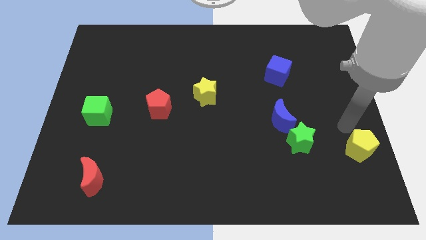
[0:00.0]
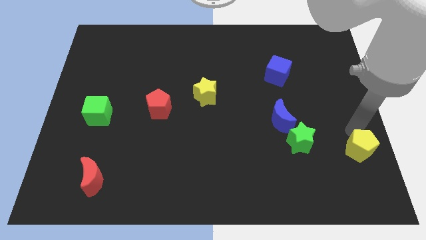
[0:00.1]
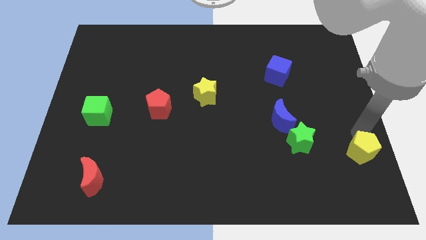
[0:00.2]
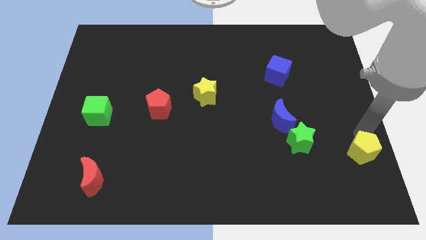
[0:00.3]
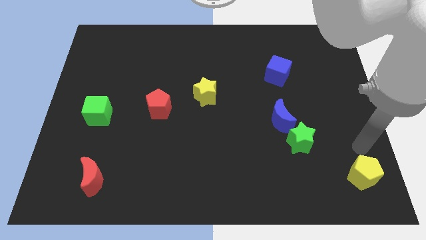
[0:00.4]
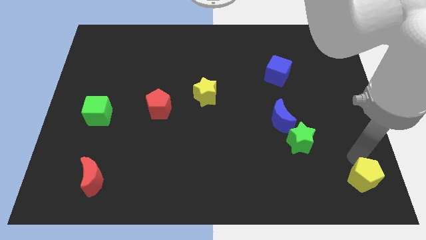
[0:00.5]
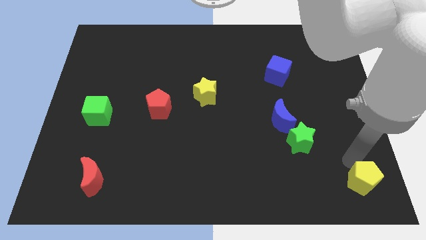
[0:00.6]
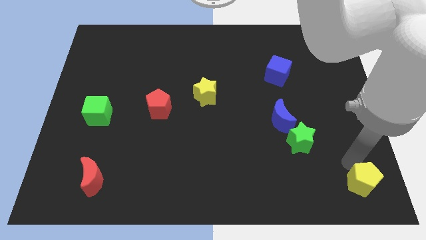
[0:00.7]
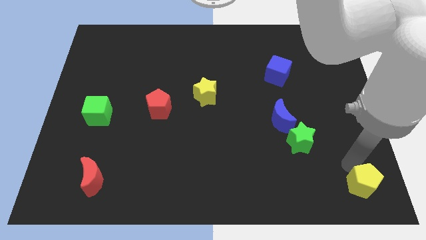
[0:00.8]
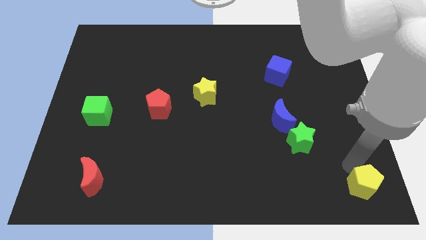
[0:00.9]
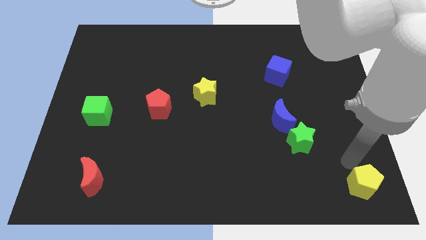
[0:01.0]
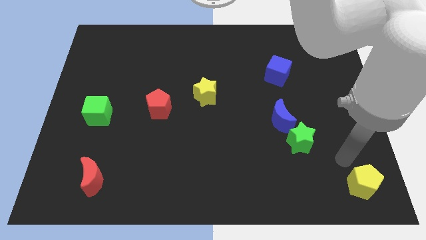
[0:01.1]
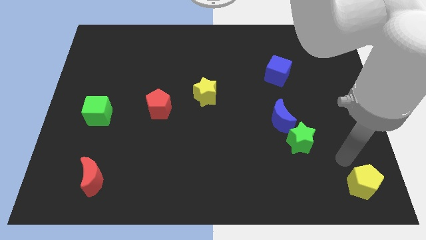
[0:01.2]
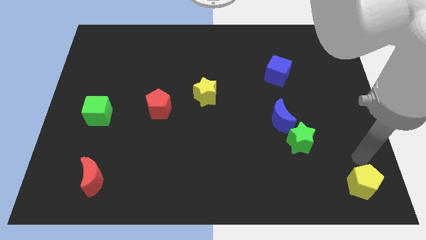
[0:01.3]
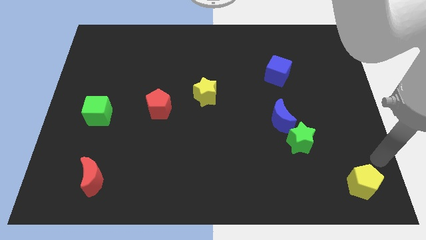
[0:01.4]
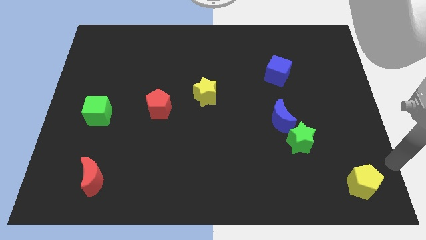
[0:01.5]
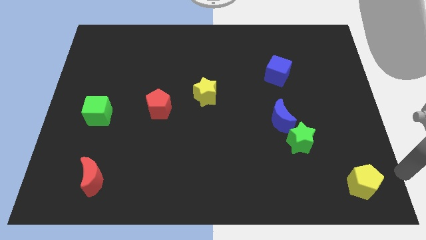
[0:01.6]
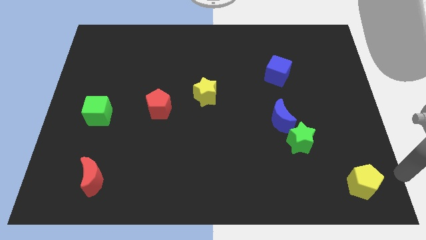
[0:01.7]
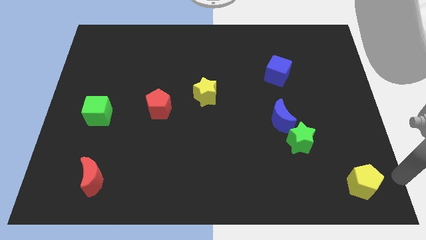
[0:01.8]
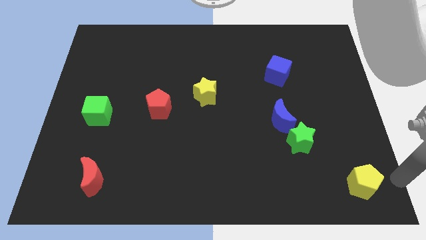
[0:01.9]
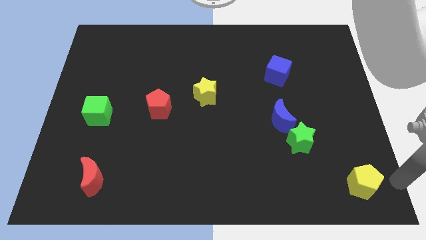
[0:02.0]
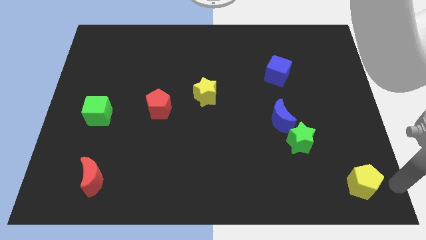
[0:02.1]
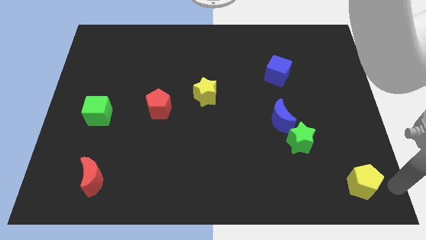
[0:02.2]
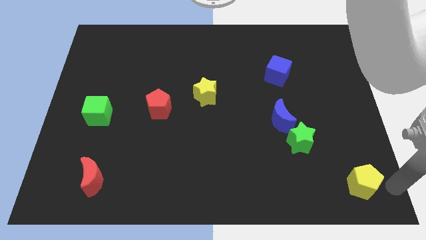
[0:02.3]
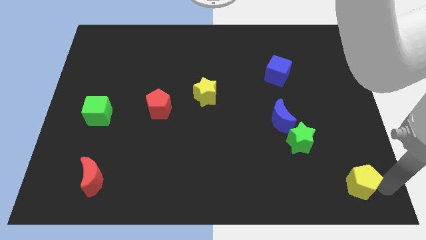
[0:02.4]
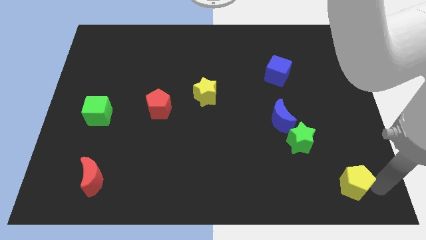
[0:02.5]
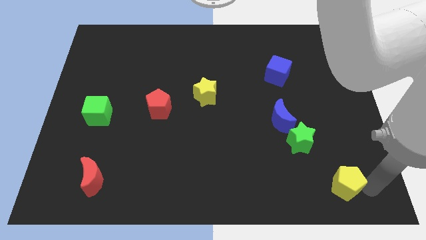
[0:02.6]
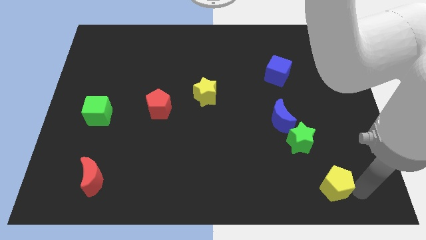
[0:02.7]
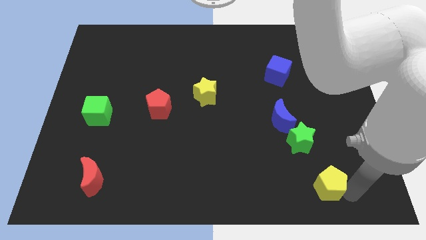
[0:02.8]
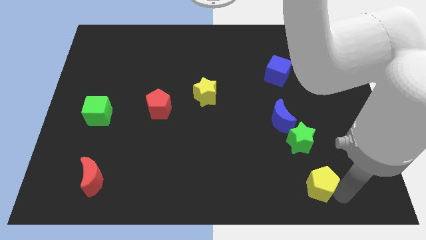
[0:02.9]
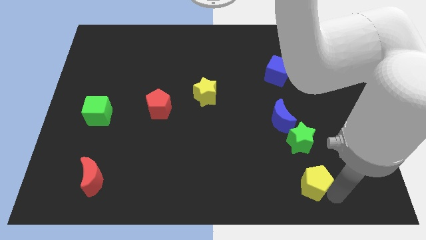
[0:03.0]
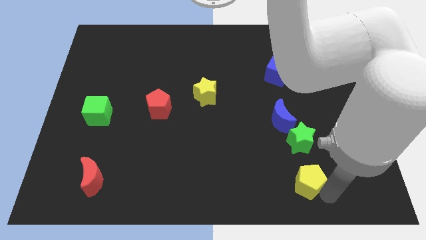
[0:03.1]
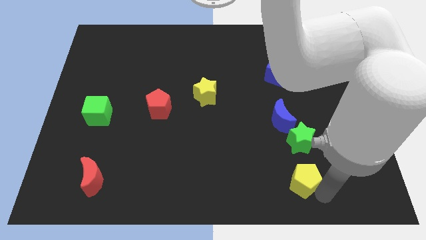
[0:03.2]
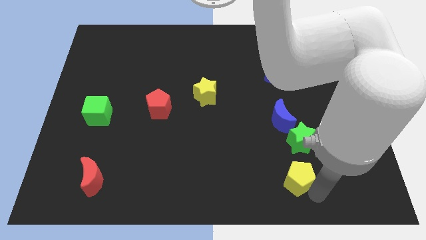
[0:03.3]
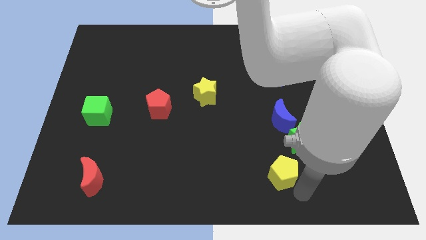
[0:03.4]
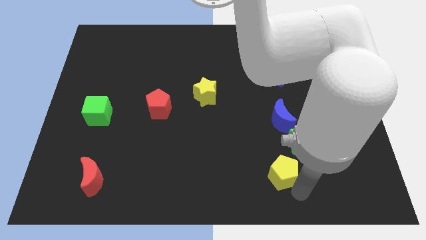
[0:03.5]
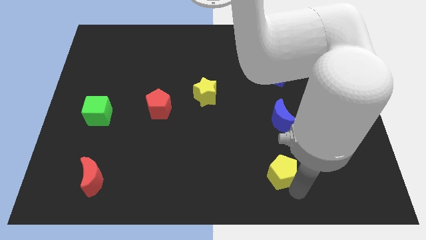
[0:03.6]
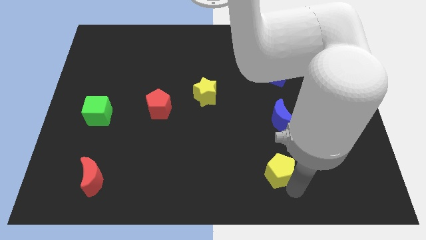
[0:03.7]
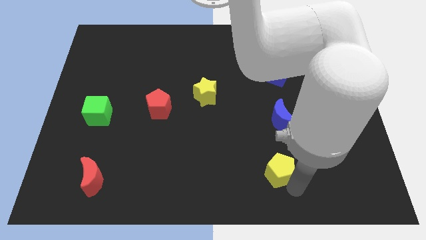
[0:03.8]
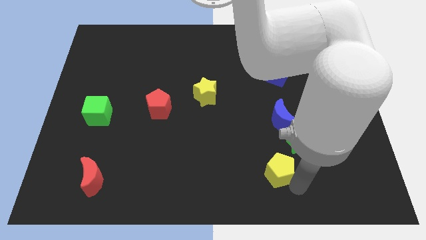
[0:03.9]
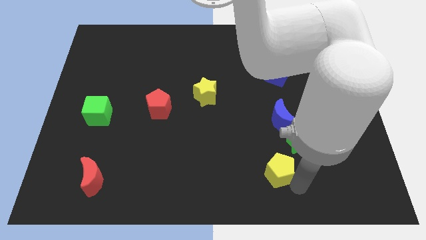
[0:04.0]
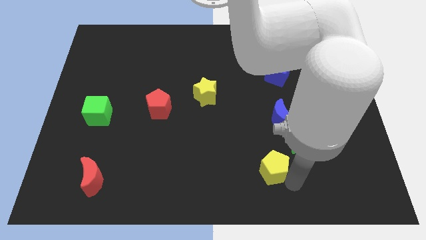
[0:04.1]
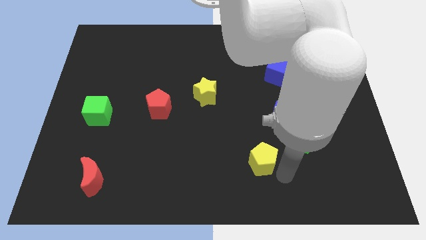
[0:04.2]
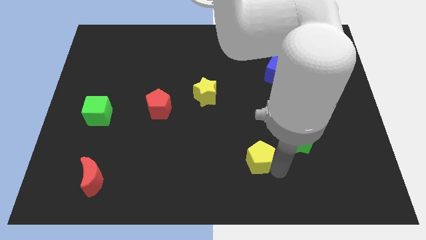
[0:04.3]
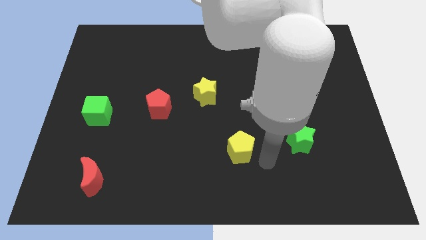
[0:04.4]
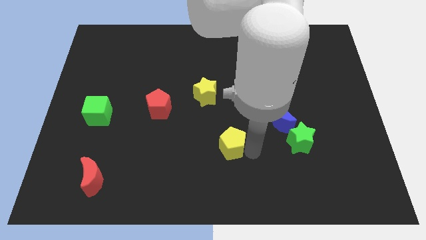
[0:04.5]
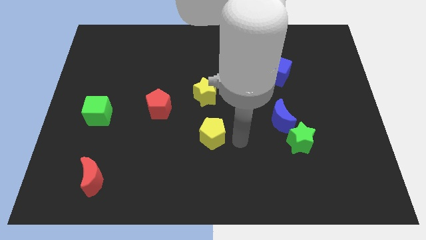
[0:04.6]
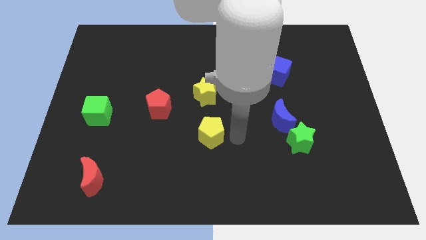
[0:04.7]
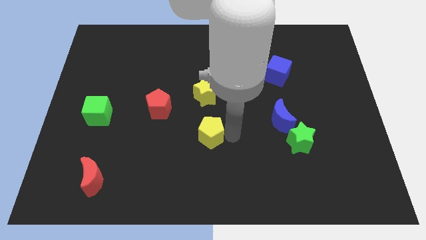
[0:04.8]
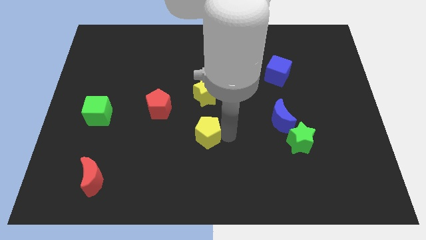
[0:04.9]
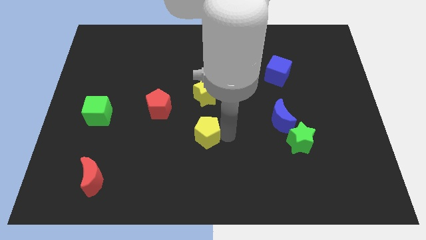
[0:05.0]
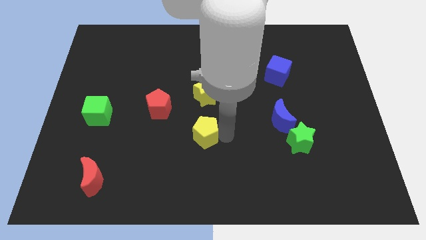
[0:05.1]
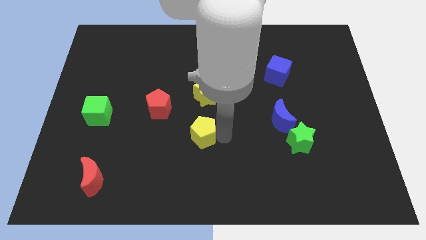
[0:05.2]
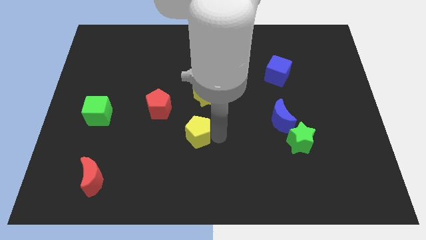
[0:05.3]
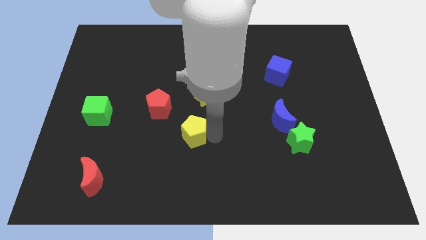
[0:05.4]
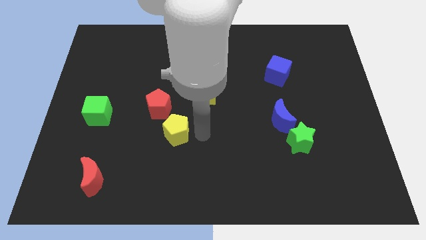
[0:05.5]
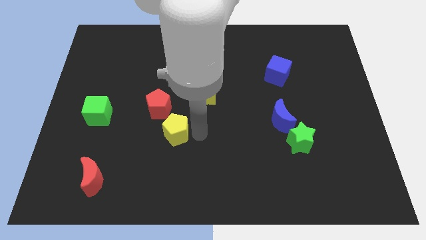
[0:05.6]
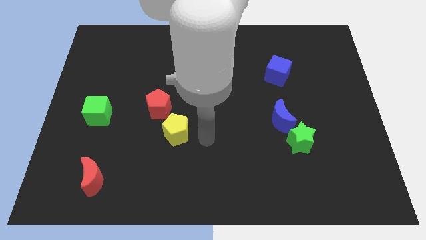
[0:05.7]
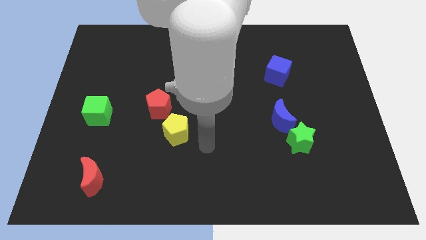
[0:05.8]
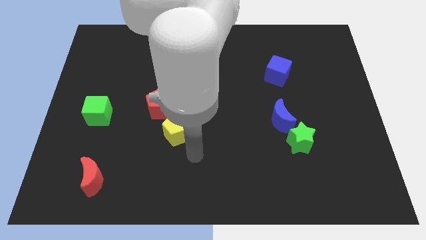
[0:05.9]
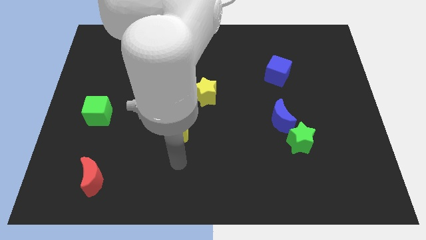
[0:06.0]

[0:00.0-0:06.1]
move the yellow pentagon to the bottom right of the red pentagon

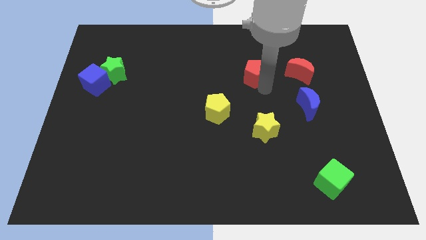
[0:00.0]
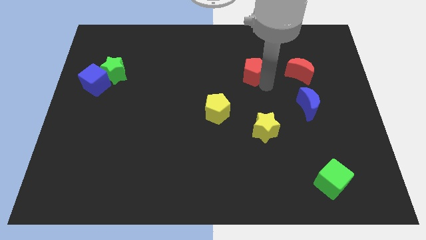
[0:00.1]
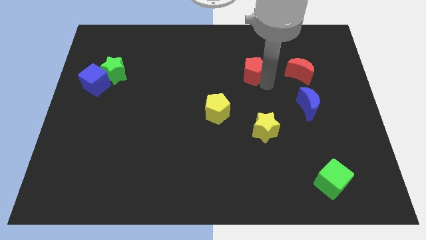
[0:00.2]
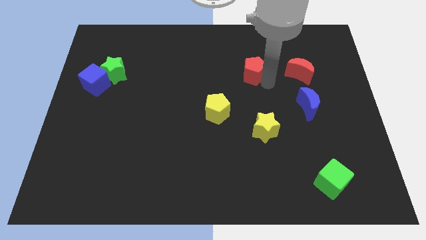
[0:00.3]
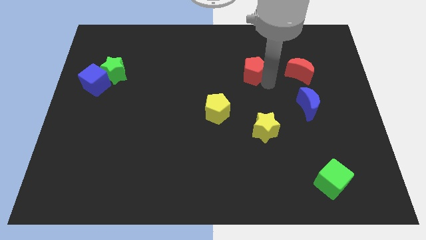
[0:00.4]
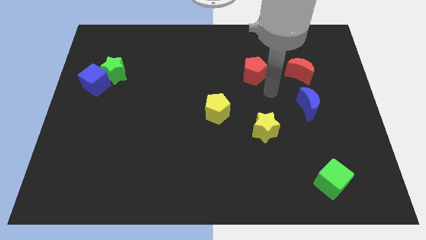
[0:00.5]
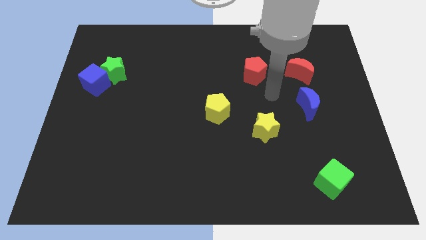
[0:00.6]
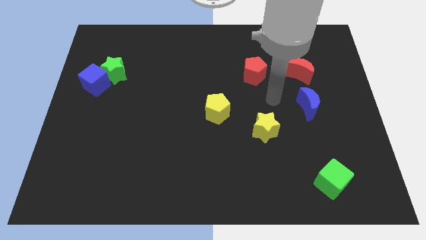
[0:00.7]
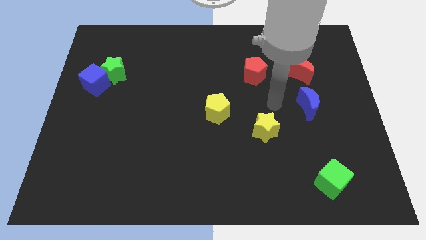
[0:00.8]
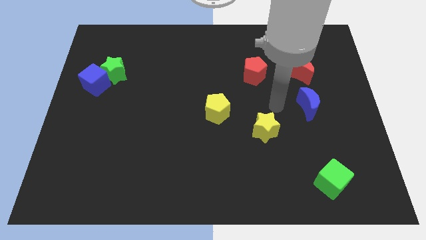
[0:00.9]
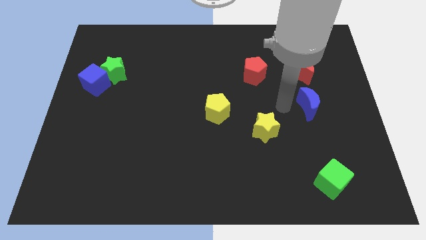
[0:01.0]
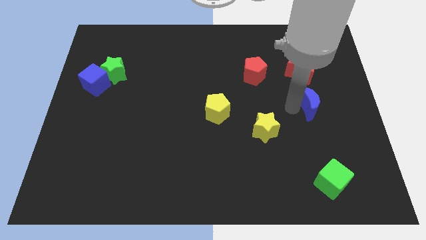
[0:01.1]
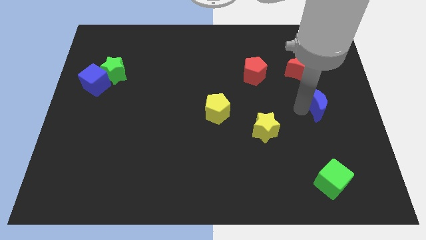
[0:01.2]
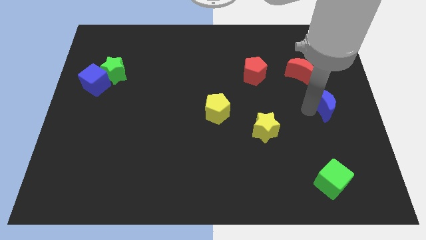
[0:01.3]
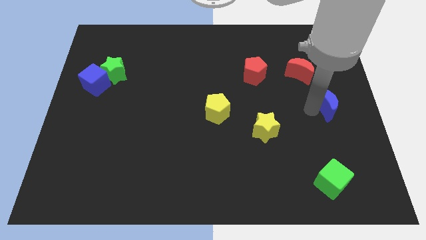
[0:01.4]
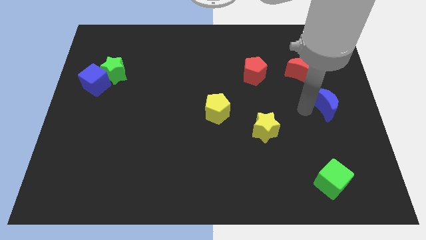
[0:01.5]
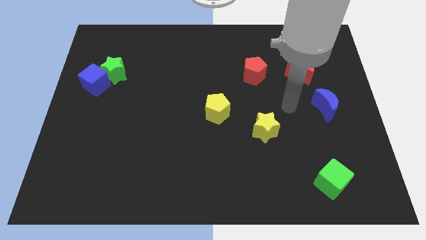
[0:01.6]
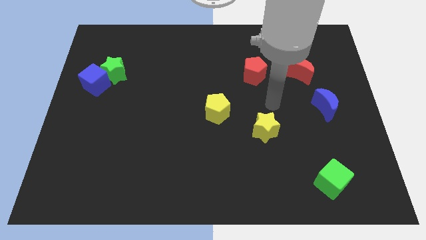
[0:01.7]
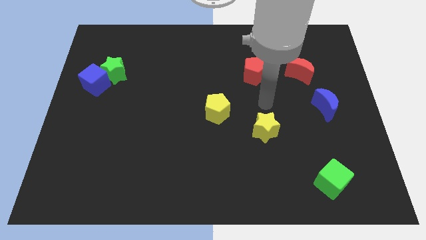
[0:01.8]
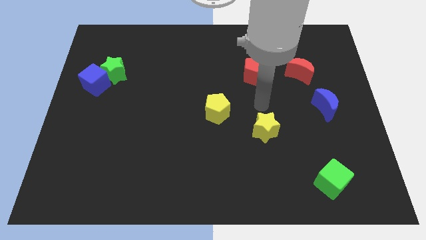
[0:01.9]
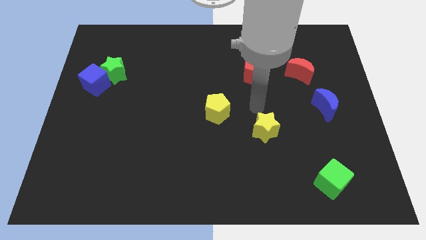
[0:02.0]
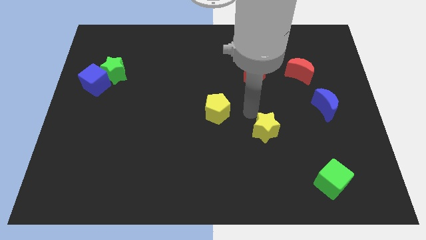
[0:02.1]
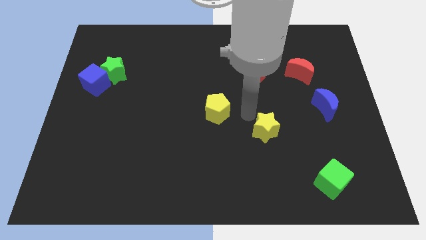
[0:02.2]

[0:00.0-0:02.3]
move the blue moon slightly right

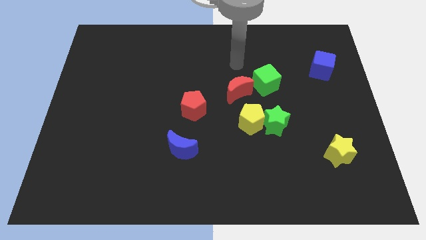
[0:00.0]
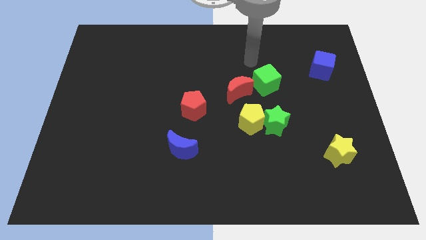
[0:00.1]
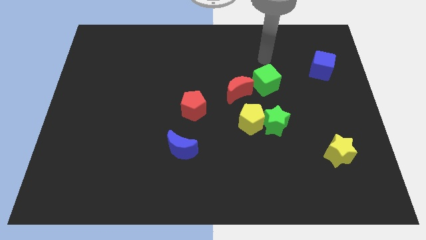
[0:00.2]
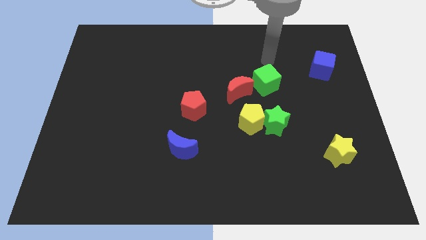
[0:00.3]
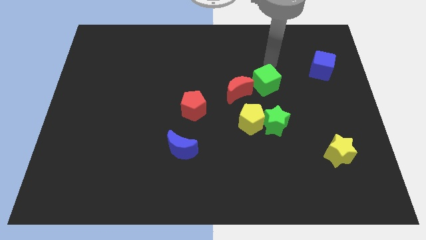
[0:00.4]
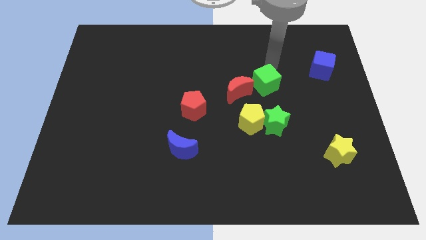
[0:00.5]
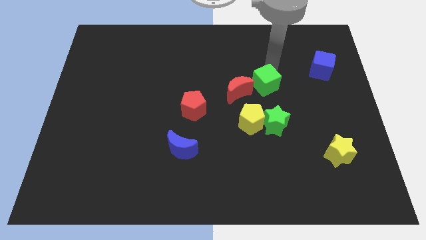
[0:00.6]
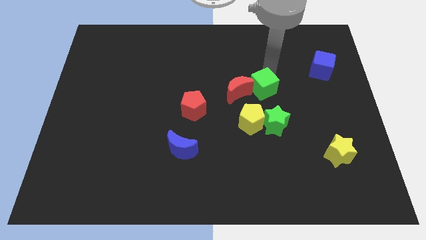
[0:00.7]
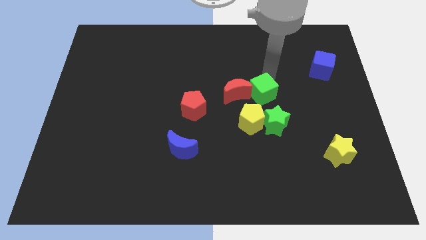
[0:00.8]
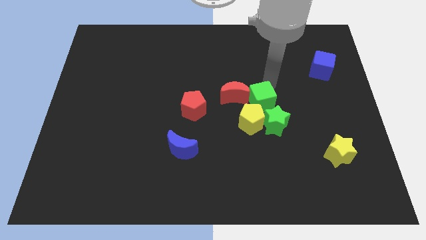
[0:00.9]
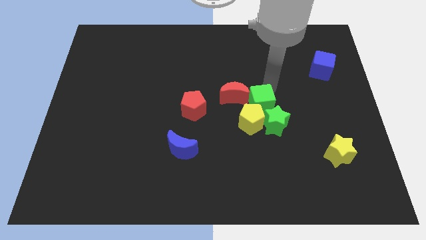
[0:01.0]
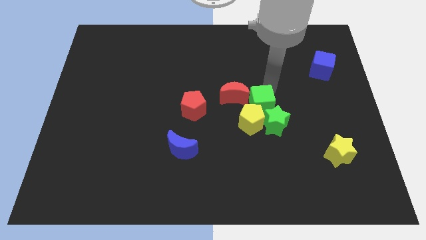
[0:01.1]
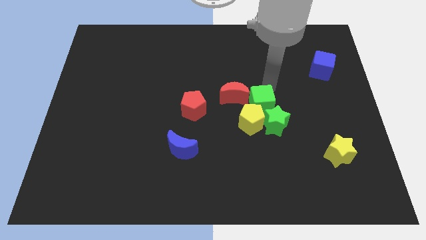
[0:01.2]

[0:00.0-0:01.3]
move green cube into the group of blocks
